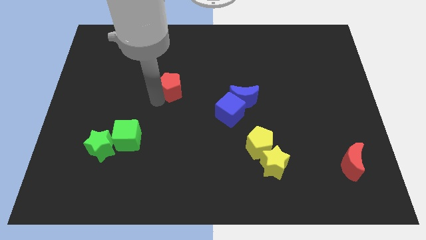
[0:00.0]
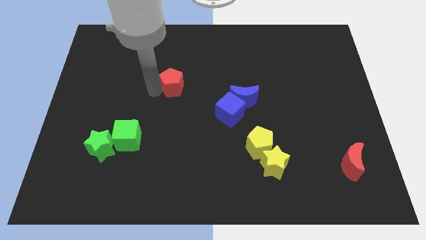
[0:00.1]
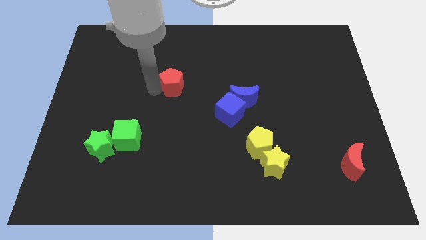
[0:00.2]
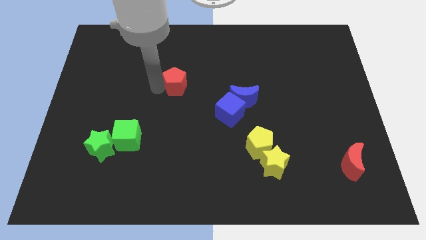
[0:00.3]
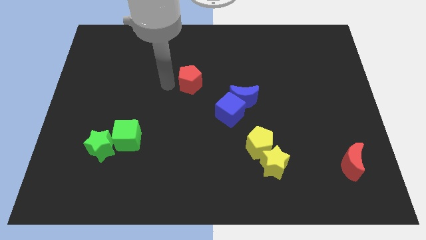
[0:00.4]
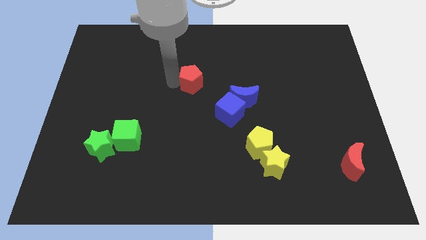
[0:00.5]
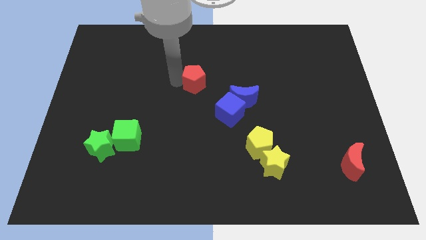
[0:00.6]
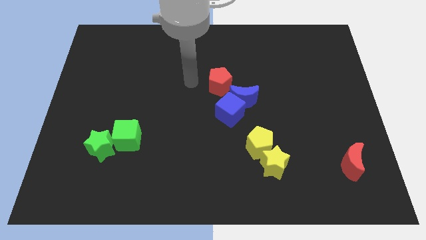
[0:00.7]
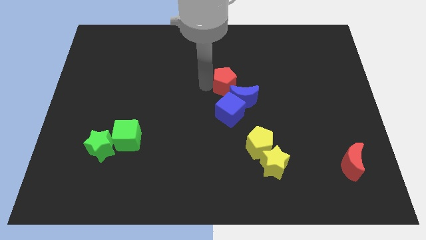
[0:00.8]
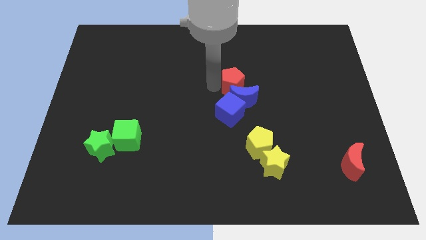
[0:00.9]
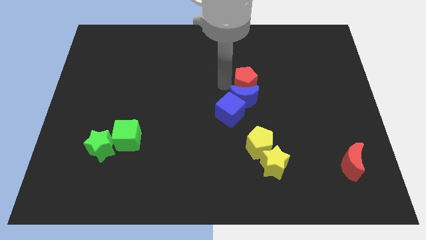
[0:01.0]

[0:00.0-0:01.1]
push red pentagon to the top of the blue crescent

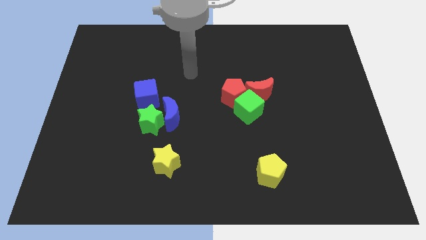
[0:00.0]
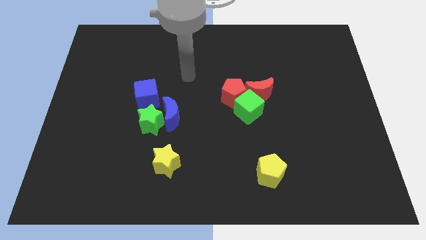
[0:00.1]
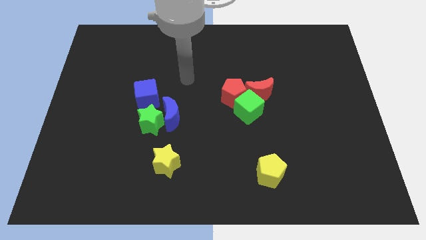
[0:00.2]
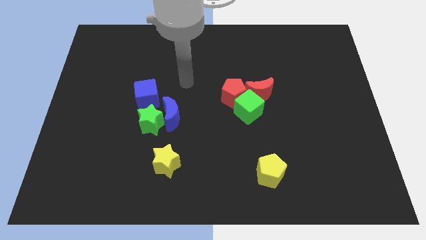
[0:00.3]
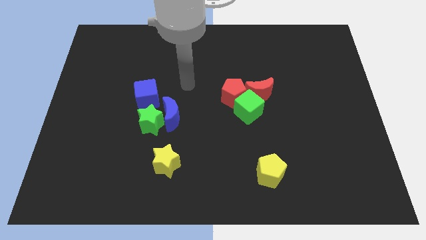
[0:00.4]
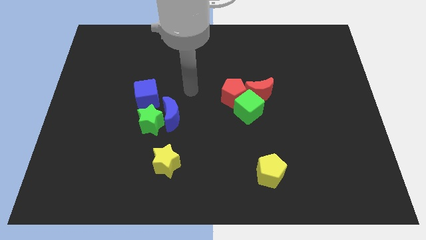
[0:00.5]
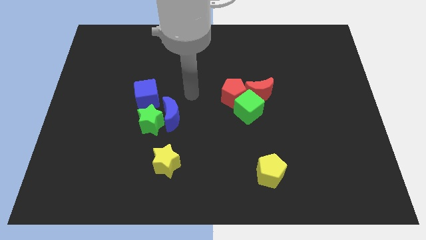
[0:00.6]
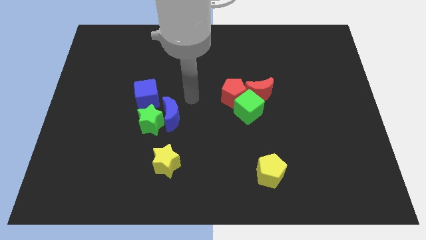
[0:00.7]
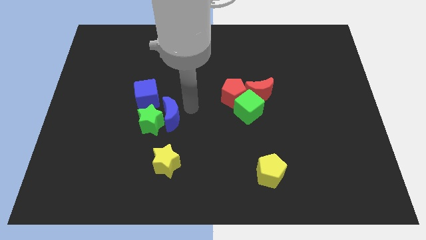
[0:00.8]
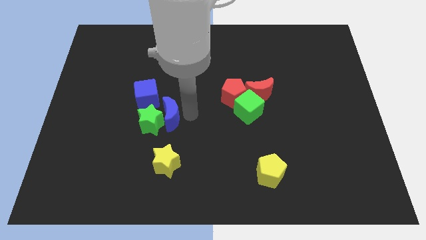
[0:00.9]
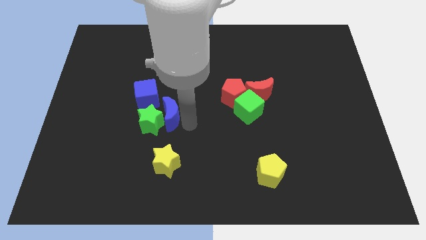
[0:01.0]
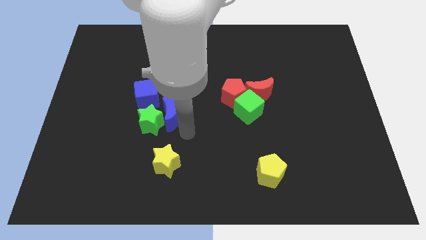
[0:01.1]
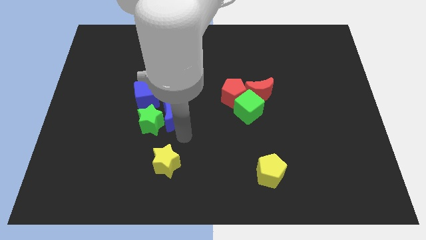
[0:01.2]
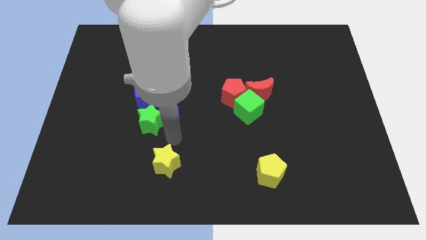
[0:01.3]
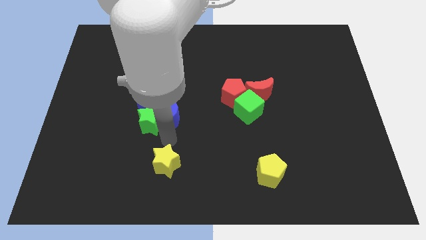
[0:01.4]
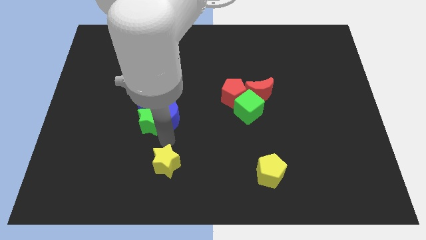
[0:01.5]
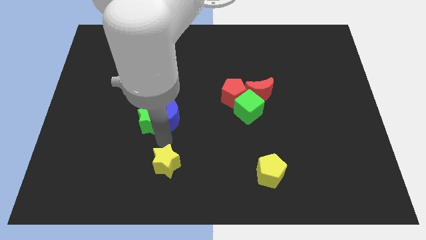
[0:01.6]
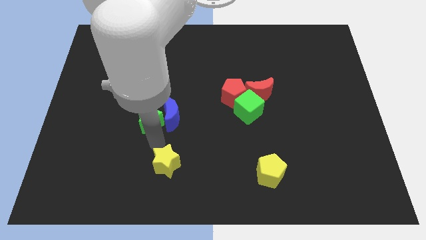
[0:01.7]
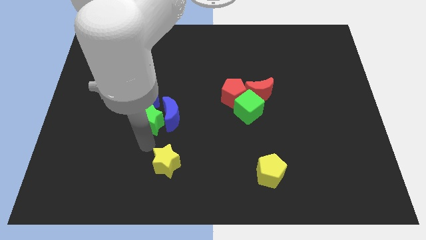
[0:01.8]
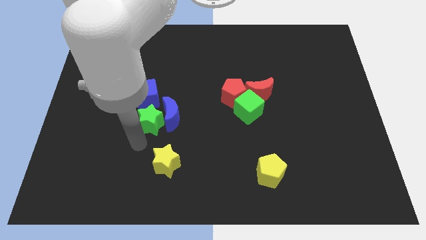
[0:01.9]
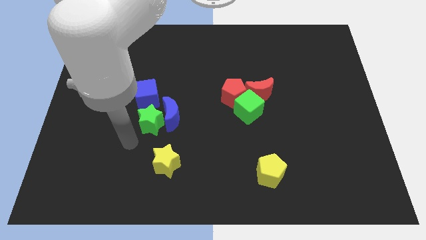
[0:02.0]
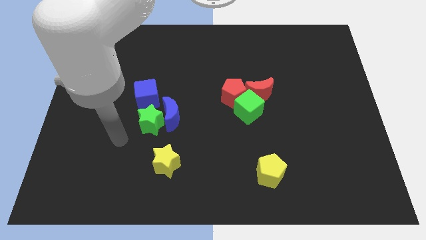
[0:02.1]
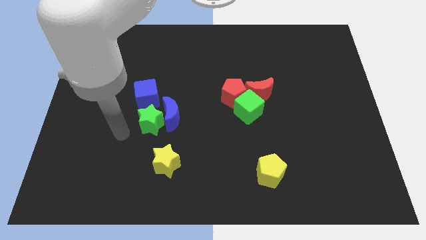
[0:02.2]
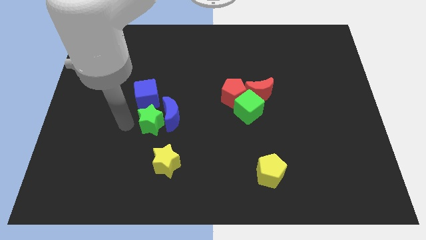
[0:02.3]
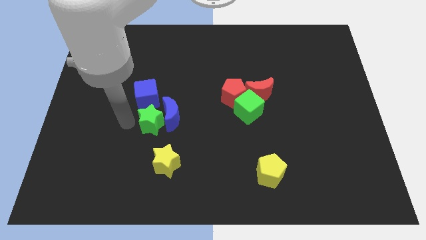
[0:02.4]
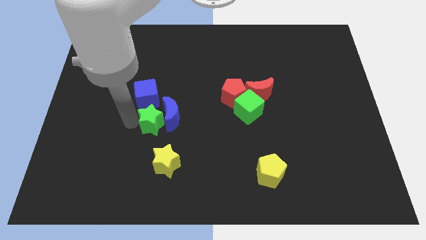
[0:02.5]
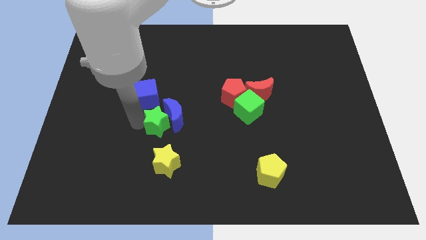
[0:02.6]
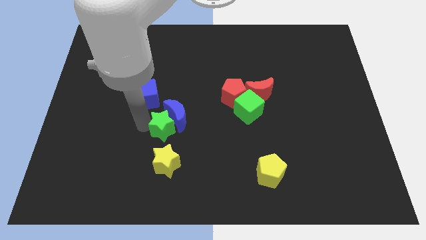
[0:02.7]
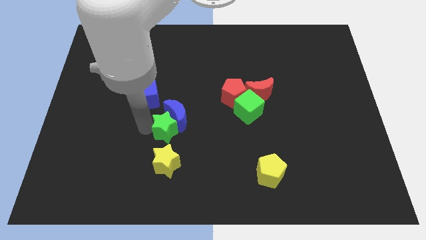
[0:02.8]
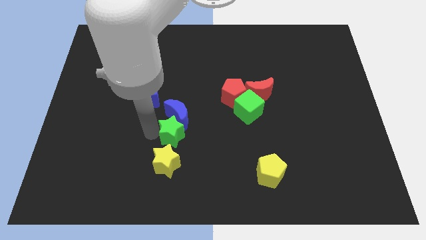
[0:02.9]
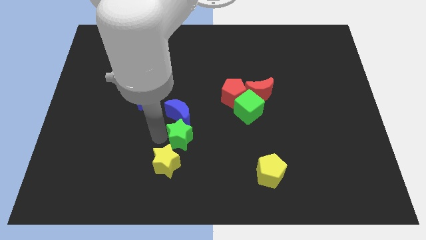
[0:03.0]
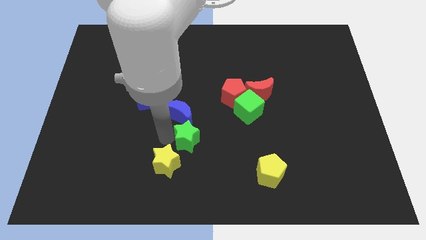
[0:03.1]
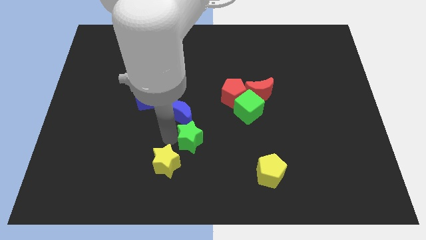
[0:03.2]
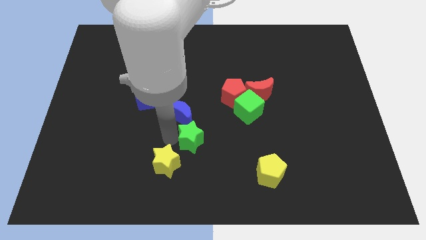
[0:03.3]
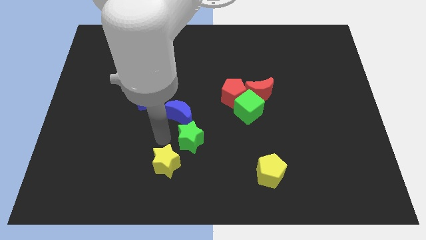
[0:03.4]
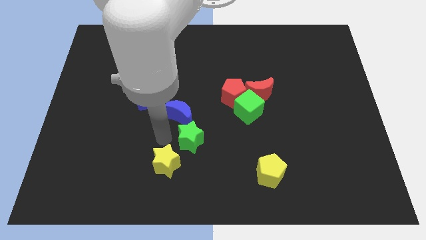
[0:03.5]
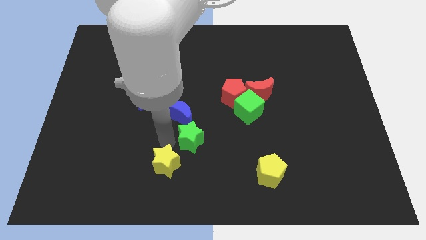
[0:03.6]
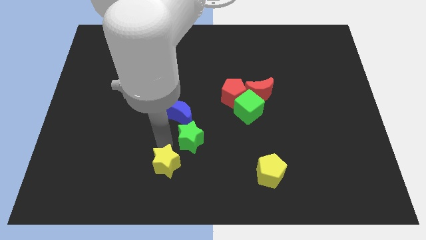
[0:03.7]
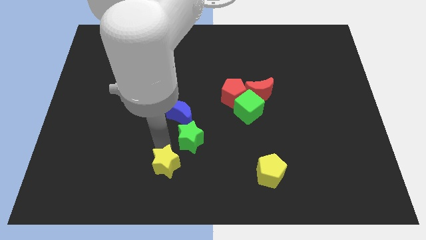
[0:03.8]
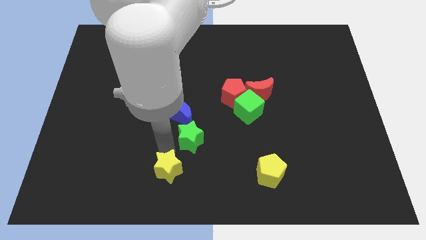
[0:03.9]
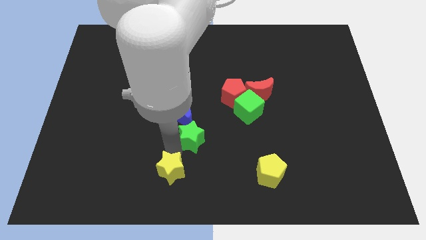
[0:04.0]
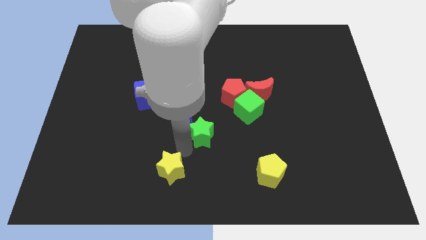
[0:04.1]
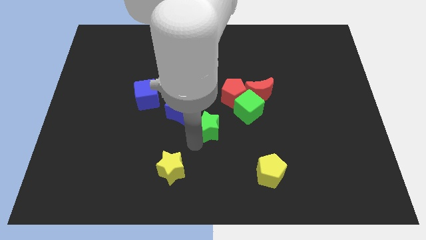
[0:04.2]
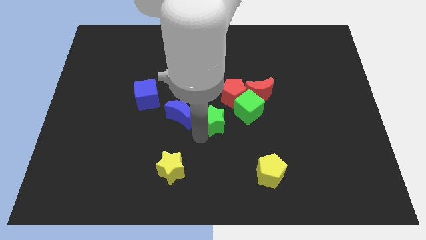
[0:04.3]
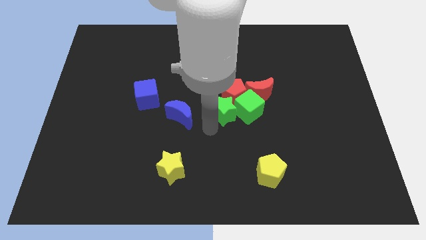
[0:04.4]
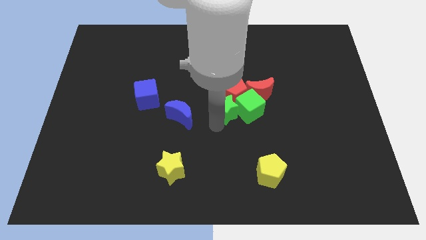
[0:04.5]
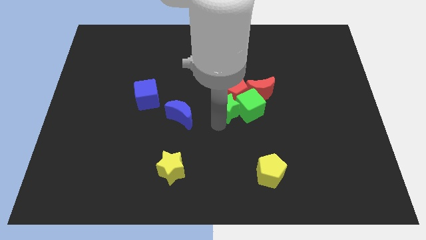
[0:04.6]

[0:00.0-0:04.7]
place the green star in between blue crescent and green cube

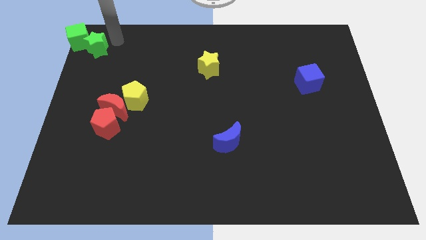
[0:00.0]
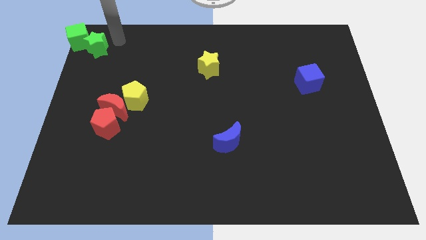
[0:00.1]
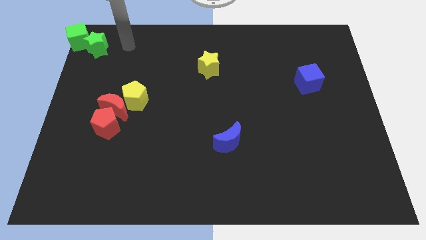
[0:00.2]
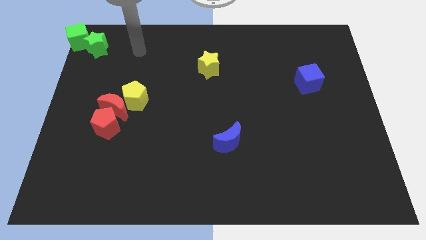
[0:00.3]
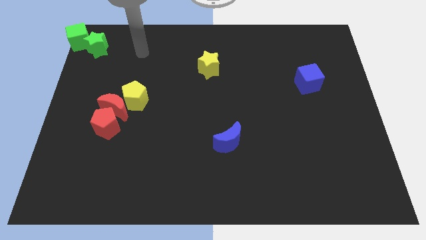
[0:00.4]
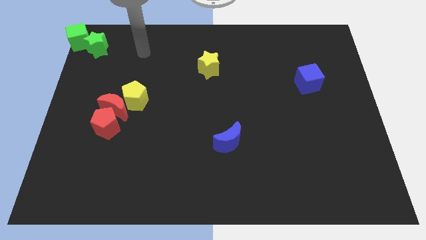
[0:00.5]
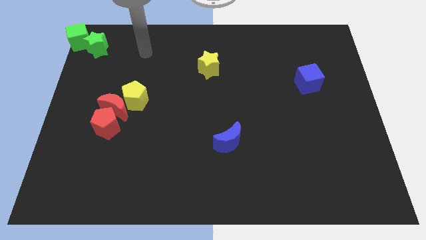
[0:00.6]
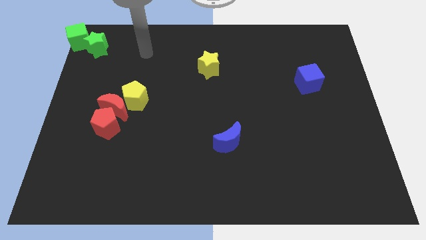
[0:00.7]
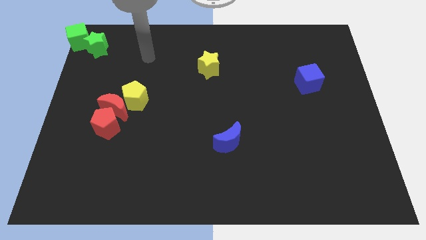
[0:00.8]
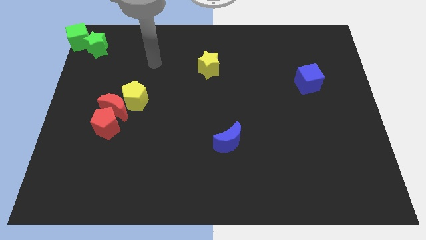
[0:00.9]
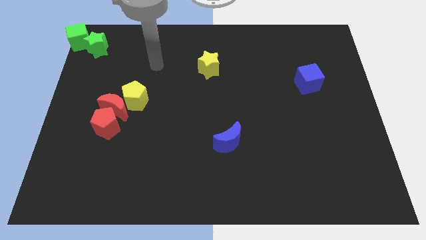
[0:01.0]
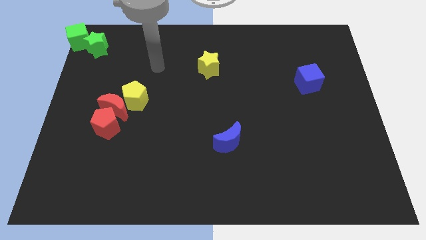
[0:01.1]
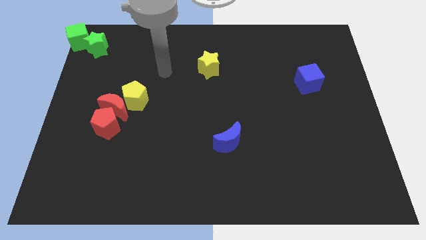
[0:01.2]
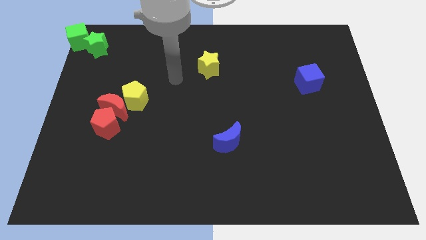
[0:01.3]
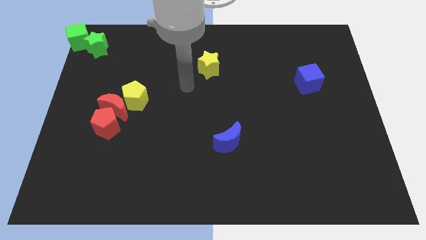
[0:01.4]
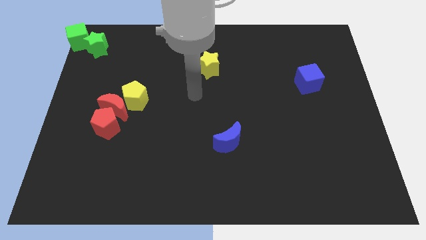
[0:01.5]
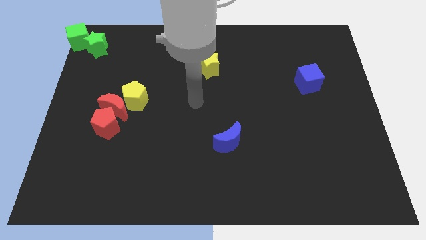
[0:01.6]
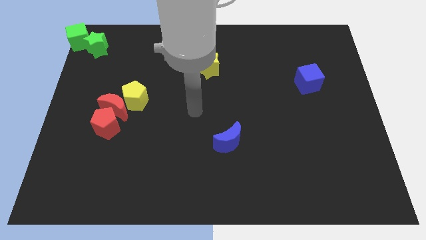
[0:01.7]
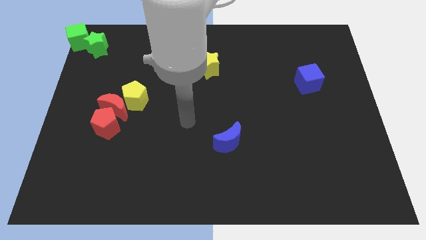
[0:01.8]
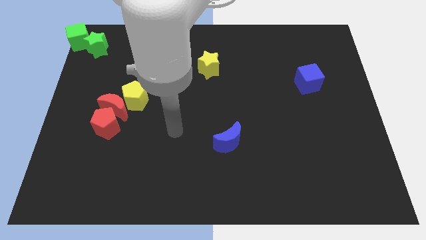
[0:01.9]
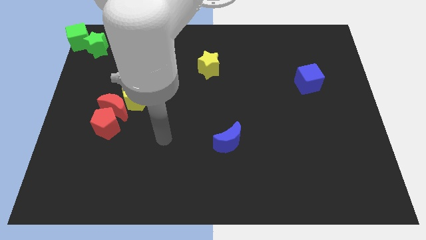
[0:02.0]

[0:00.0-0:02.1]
move the arm away from the green star

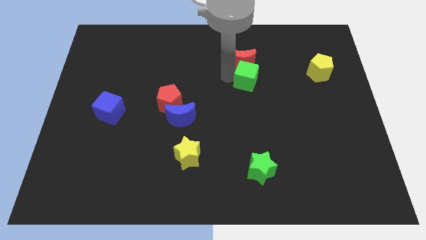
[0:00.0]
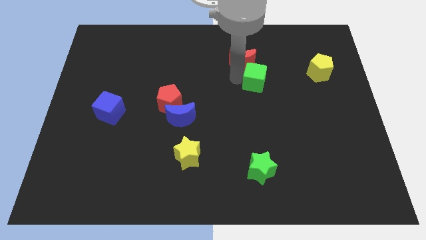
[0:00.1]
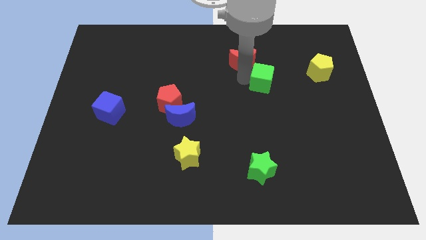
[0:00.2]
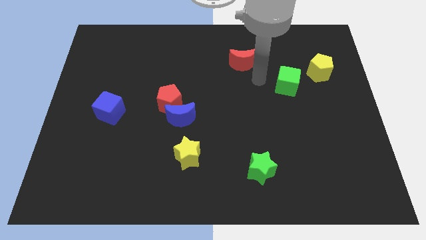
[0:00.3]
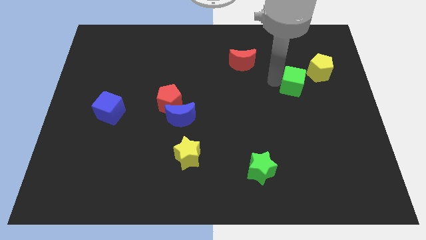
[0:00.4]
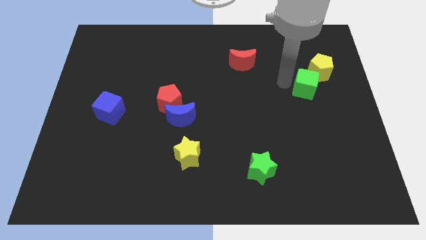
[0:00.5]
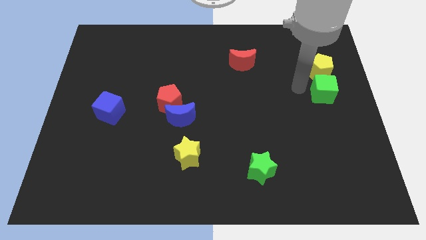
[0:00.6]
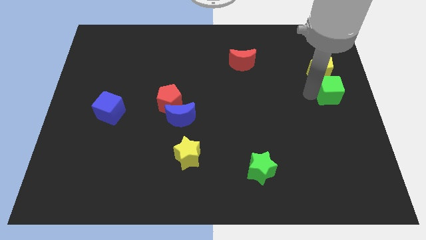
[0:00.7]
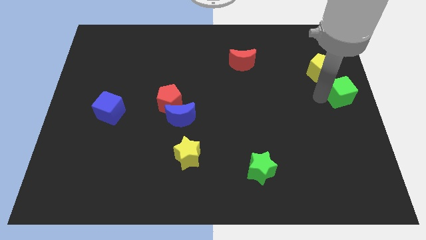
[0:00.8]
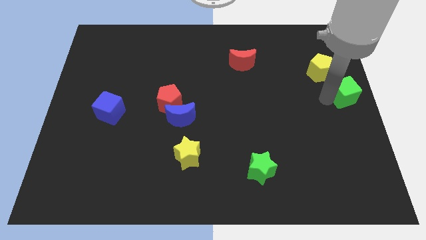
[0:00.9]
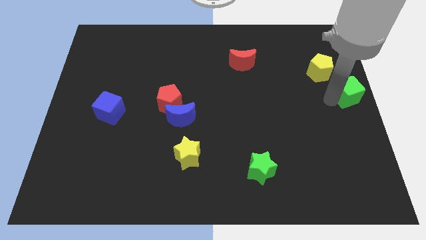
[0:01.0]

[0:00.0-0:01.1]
separate green cube from red moon
